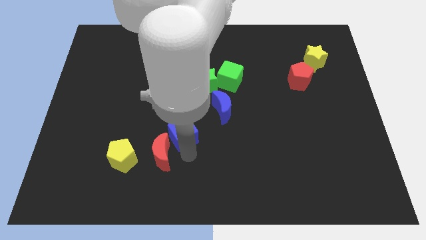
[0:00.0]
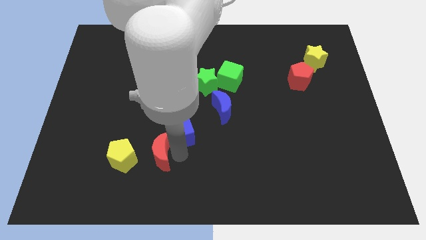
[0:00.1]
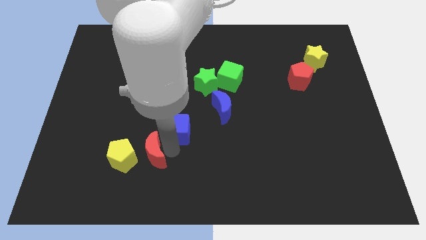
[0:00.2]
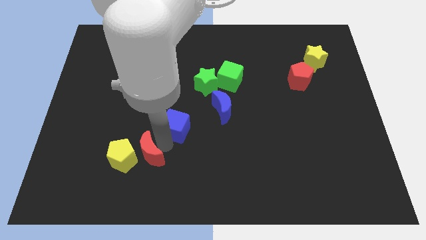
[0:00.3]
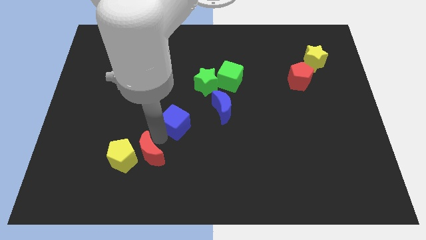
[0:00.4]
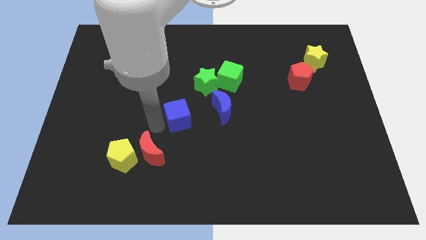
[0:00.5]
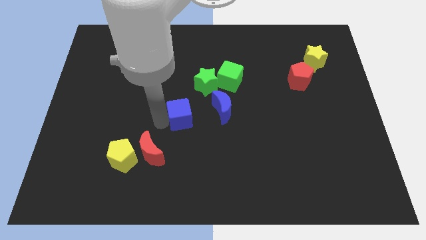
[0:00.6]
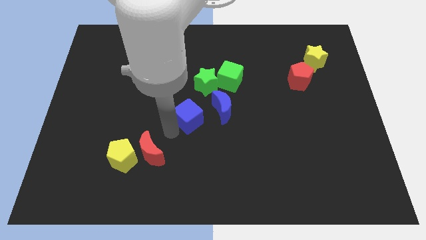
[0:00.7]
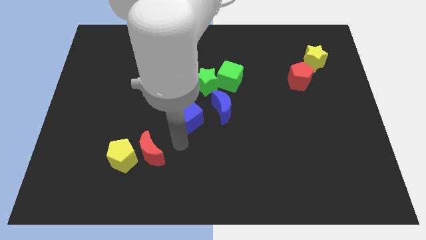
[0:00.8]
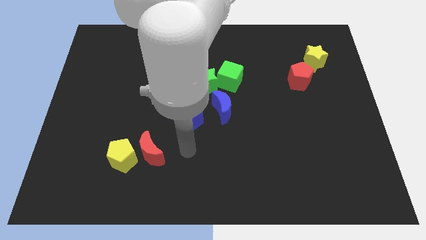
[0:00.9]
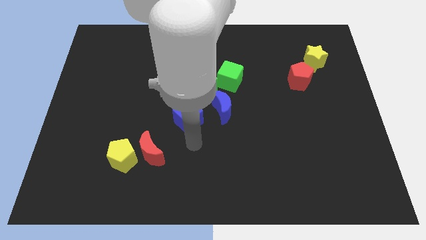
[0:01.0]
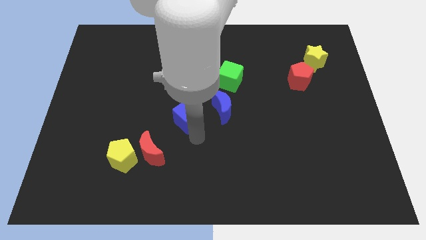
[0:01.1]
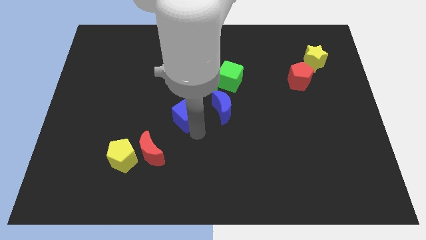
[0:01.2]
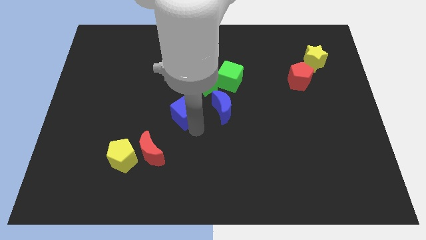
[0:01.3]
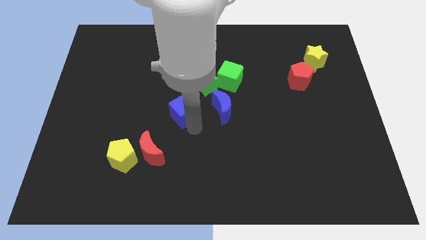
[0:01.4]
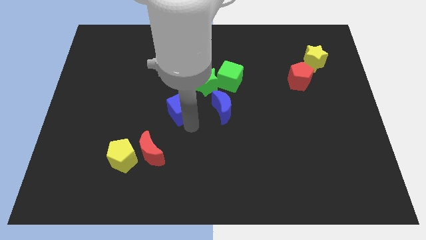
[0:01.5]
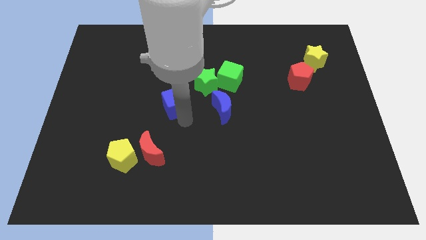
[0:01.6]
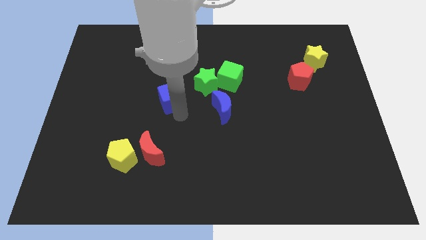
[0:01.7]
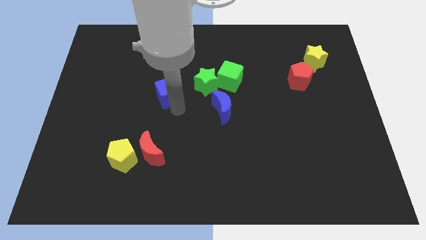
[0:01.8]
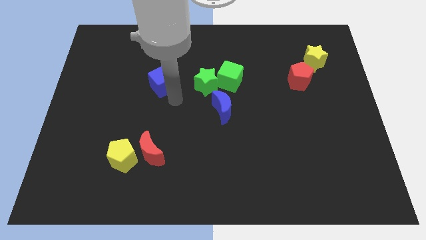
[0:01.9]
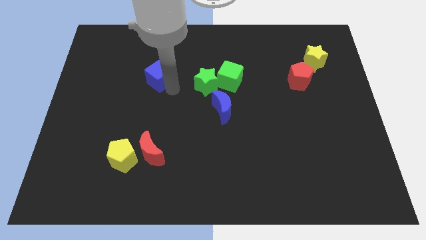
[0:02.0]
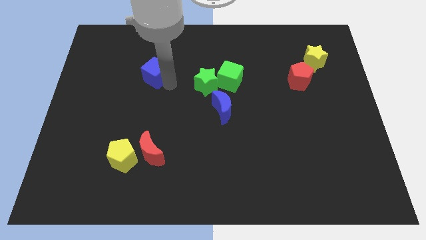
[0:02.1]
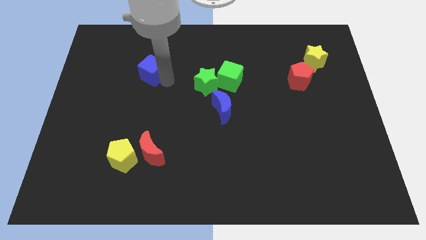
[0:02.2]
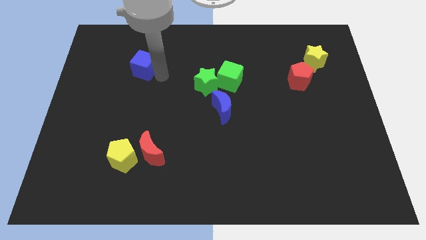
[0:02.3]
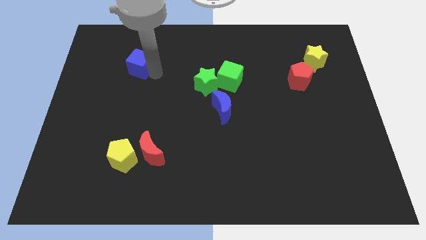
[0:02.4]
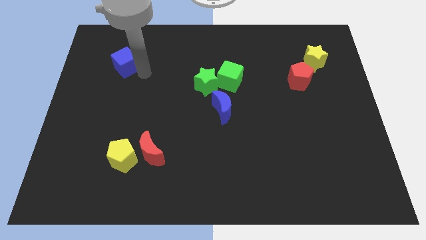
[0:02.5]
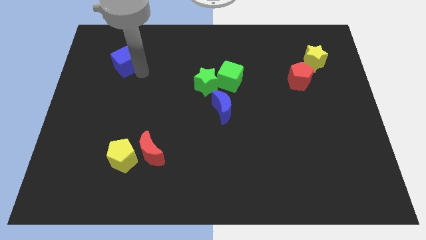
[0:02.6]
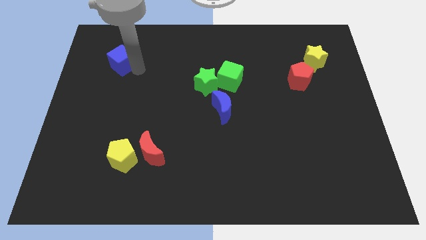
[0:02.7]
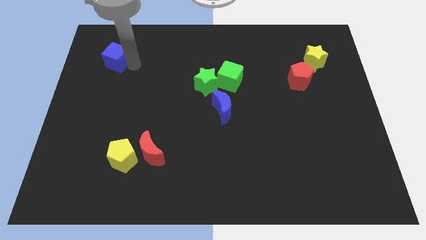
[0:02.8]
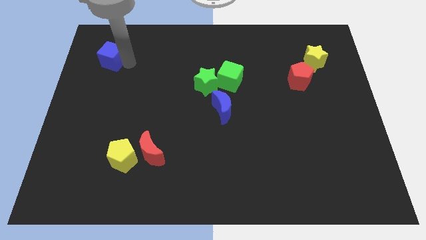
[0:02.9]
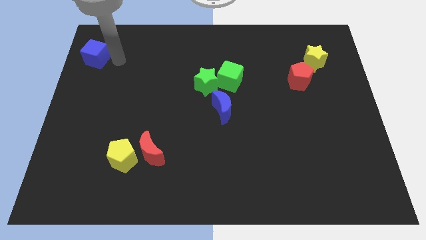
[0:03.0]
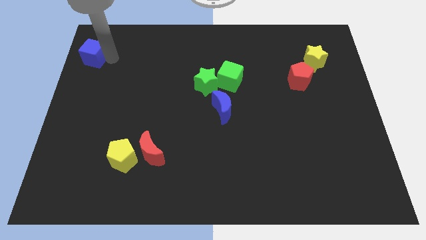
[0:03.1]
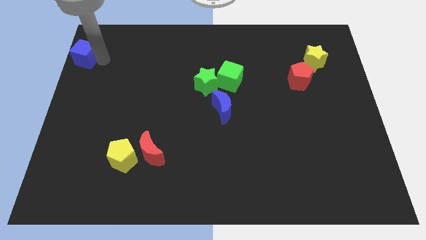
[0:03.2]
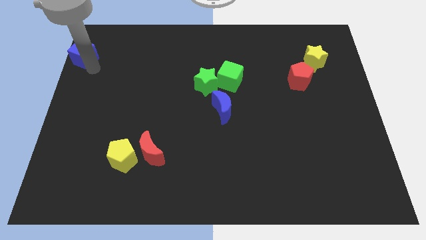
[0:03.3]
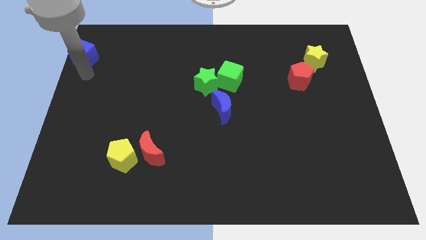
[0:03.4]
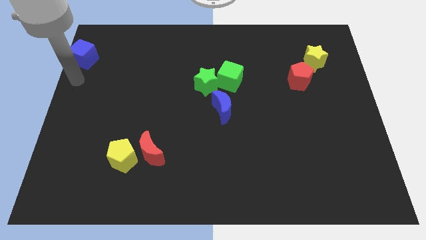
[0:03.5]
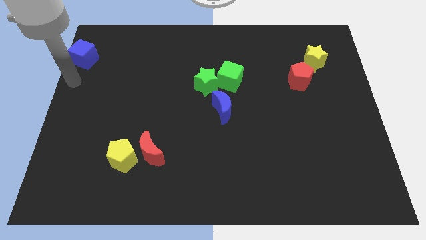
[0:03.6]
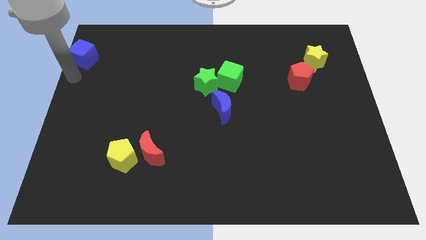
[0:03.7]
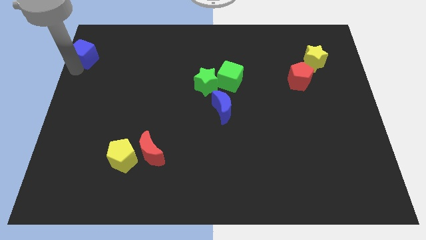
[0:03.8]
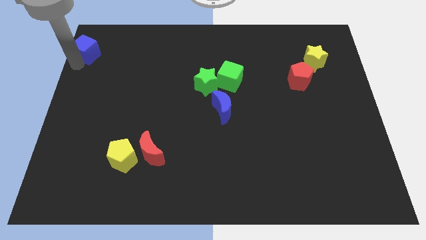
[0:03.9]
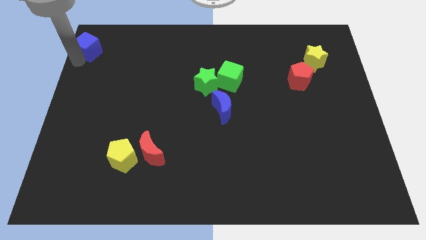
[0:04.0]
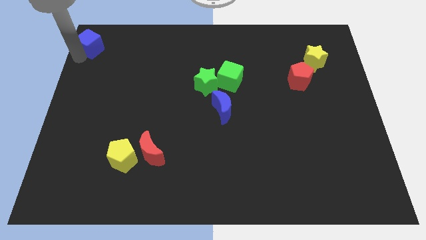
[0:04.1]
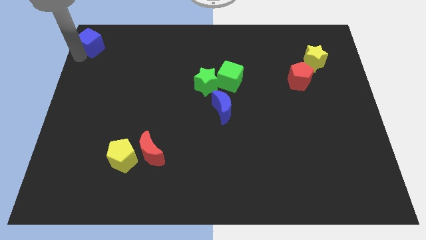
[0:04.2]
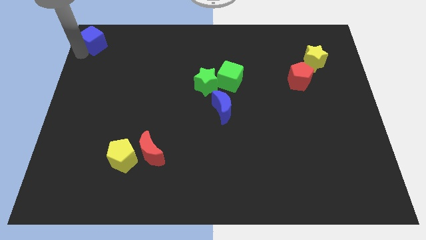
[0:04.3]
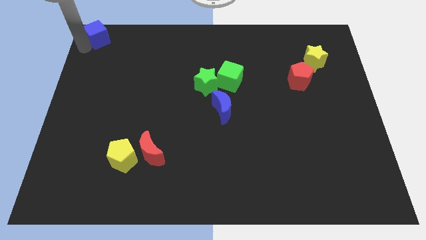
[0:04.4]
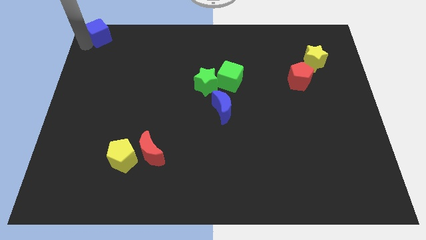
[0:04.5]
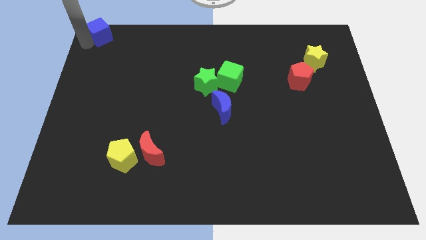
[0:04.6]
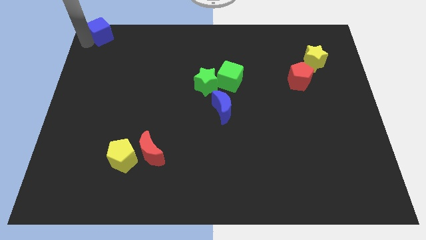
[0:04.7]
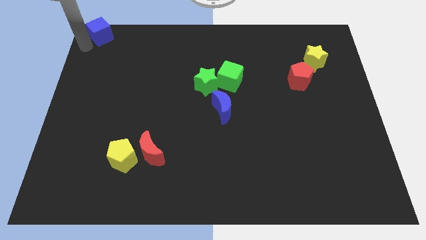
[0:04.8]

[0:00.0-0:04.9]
place blue cube at top left end

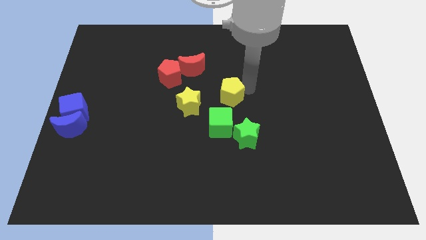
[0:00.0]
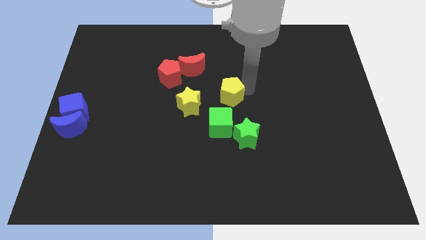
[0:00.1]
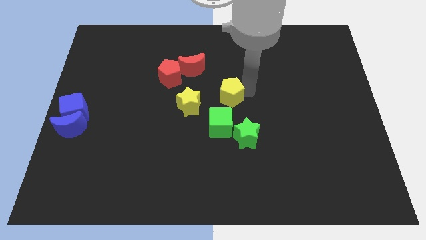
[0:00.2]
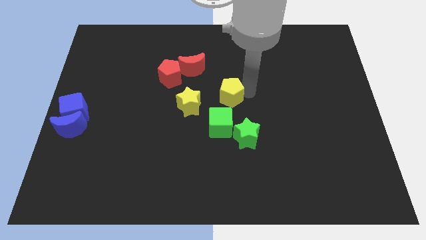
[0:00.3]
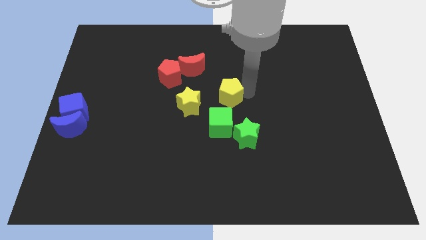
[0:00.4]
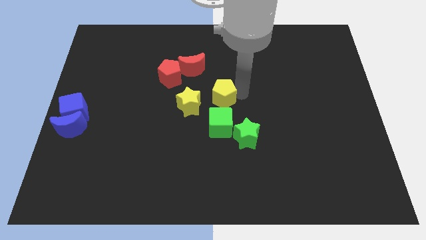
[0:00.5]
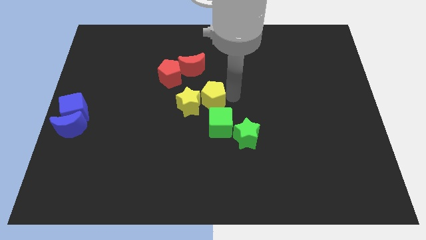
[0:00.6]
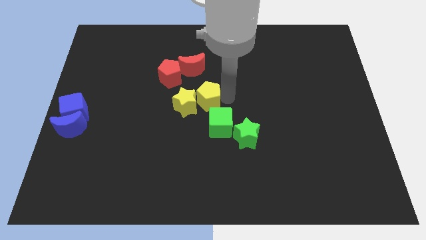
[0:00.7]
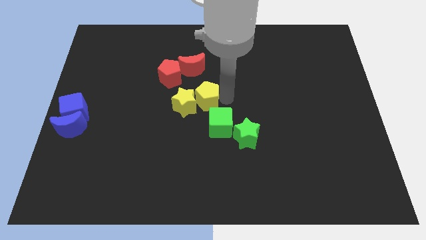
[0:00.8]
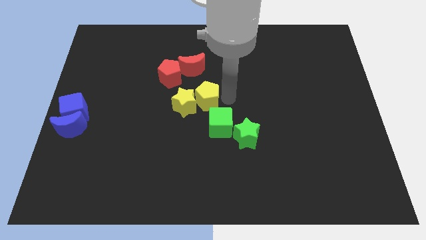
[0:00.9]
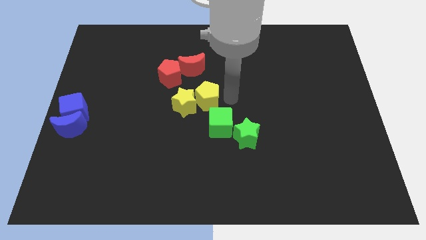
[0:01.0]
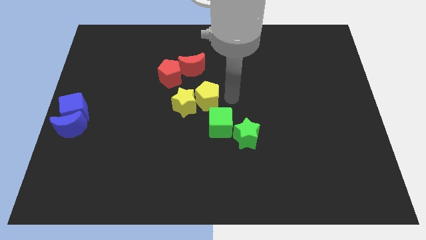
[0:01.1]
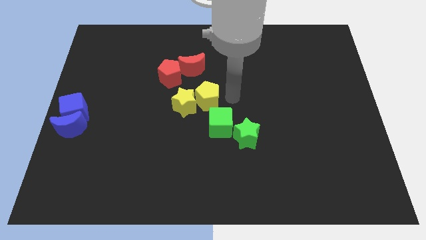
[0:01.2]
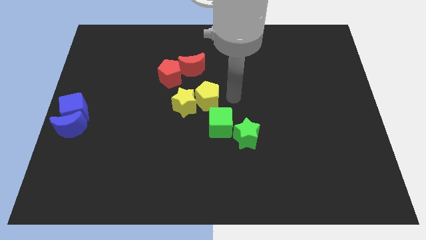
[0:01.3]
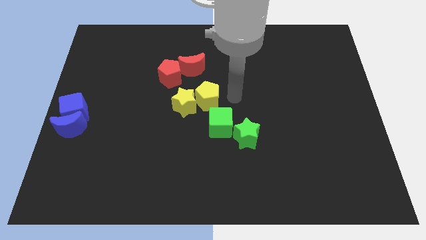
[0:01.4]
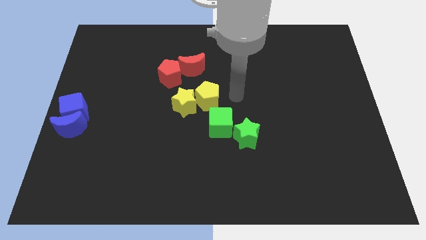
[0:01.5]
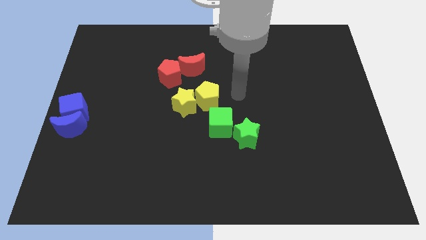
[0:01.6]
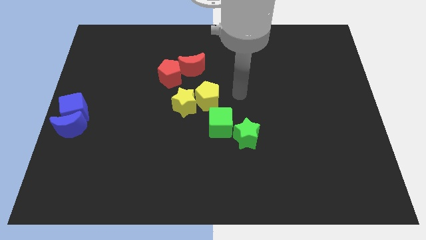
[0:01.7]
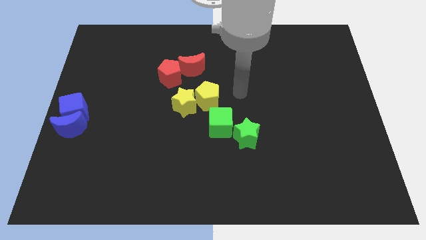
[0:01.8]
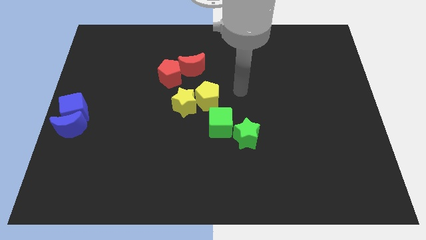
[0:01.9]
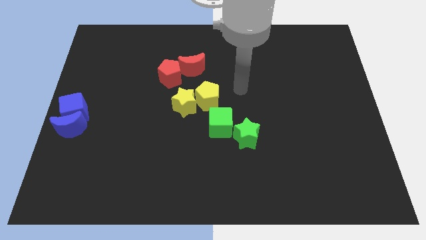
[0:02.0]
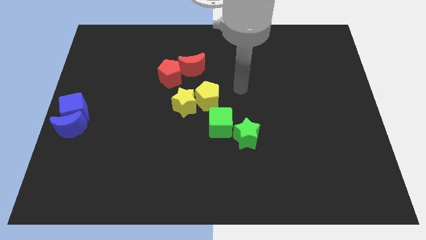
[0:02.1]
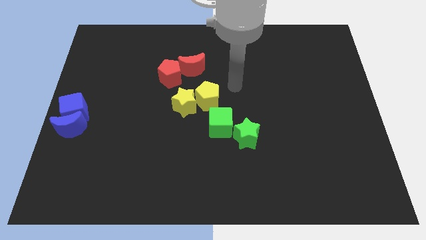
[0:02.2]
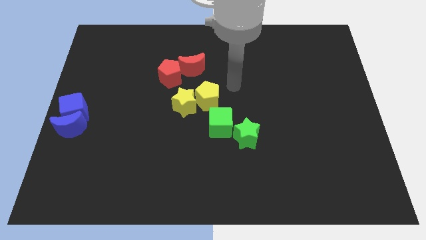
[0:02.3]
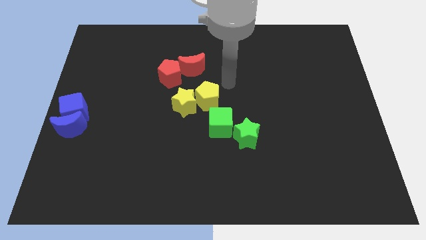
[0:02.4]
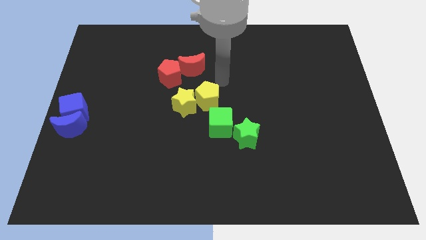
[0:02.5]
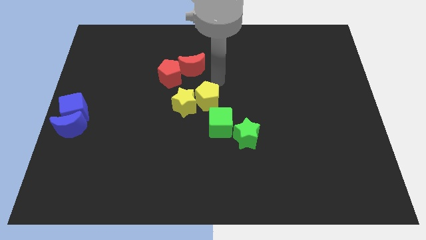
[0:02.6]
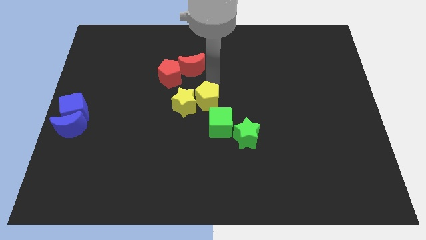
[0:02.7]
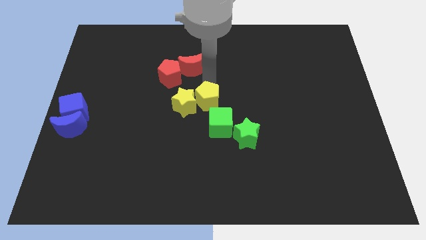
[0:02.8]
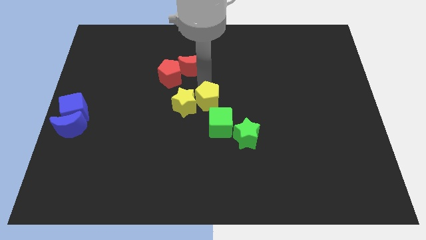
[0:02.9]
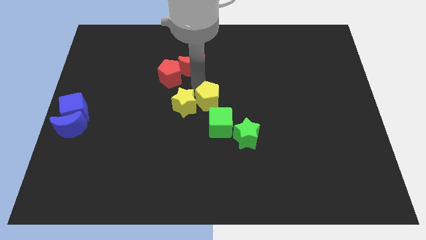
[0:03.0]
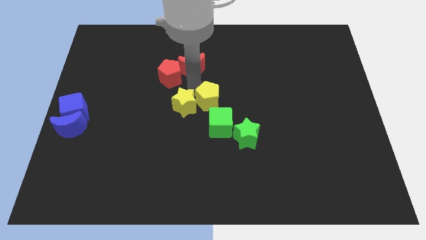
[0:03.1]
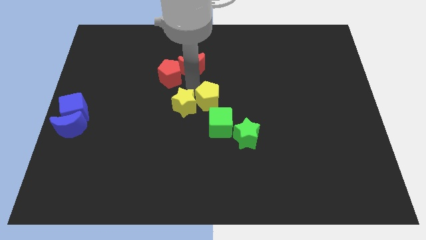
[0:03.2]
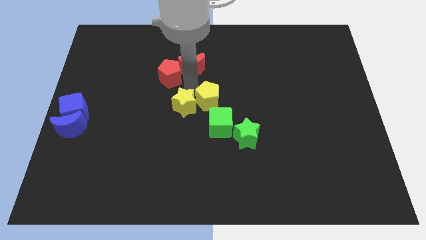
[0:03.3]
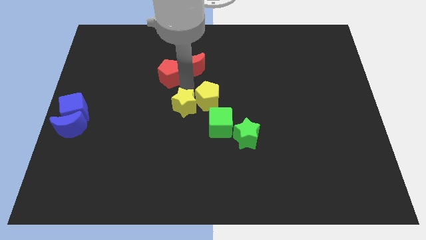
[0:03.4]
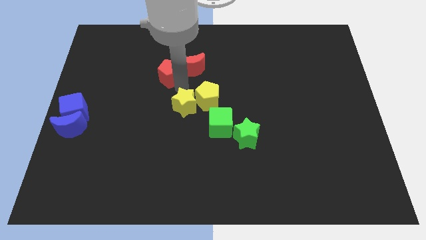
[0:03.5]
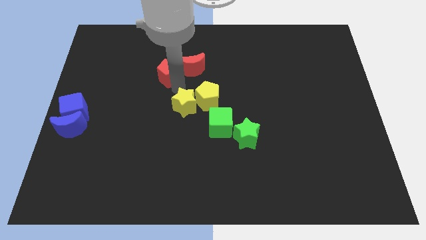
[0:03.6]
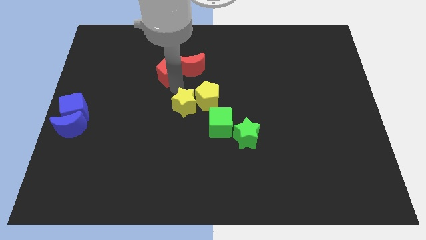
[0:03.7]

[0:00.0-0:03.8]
put the yellow pentagon into the yellow star

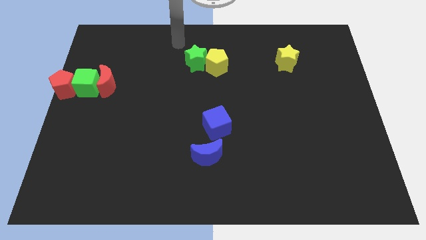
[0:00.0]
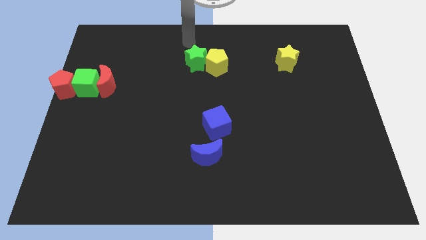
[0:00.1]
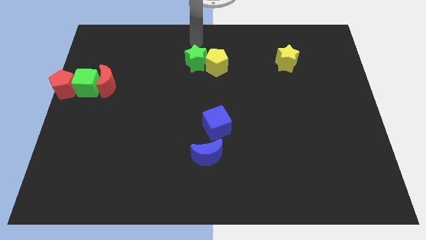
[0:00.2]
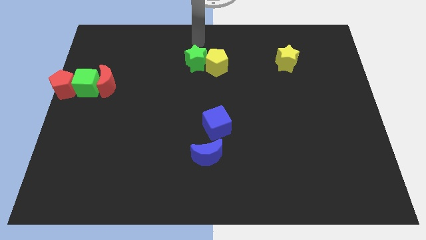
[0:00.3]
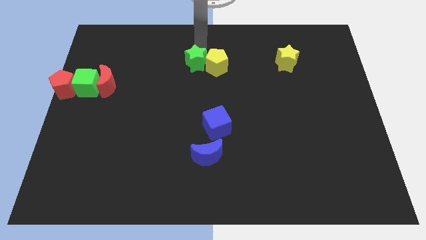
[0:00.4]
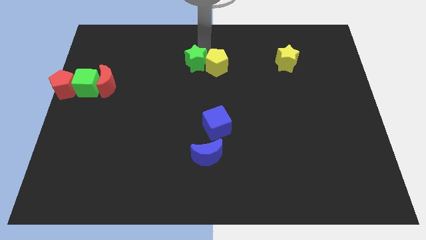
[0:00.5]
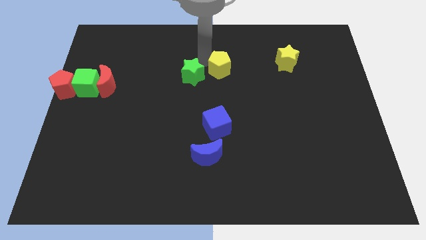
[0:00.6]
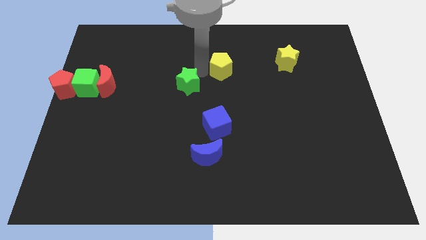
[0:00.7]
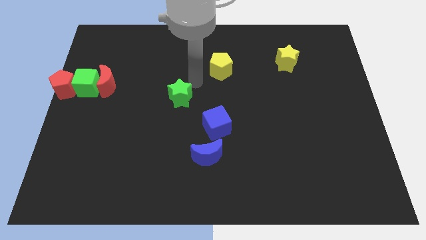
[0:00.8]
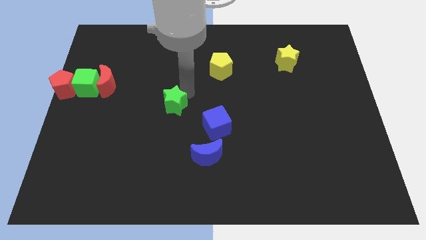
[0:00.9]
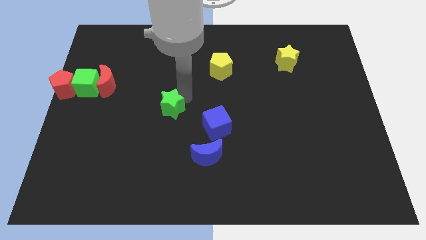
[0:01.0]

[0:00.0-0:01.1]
put the green star diagonally top left to the blue cube
